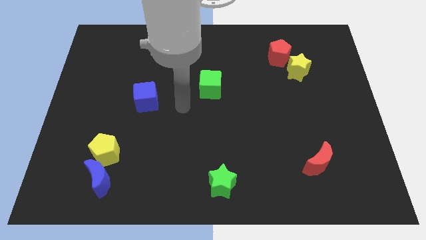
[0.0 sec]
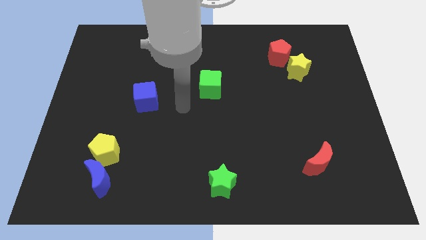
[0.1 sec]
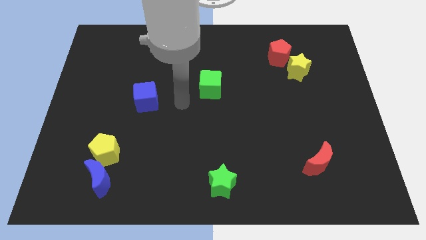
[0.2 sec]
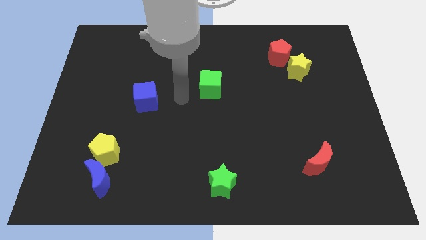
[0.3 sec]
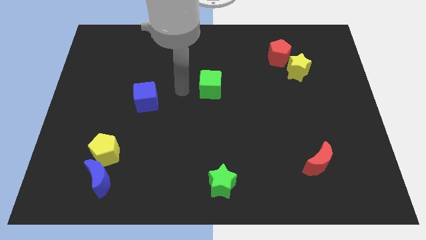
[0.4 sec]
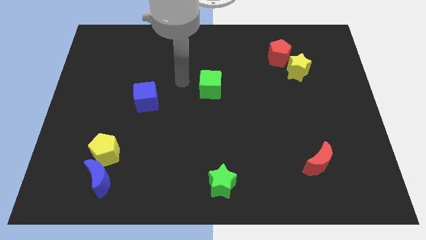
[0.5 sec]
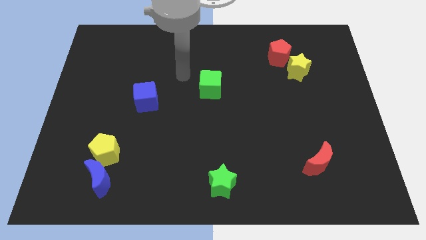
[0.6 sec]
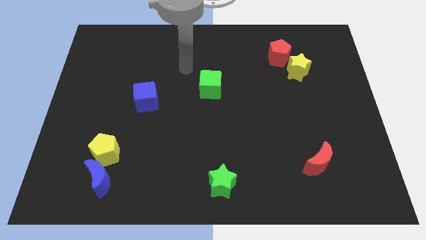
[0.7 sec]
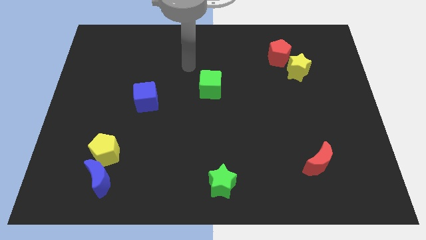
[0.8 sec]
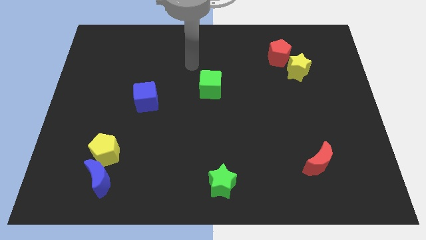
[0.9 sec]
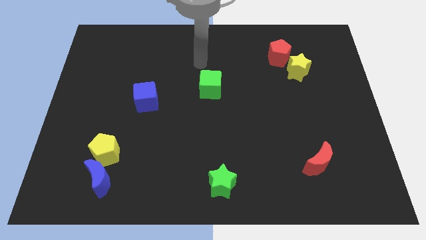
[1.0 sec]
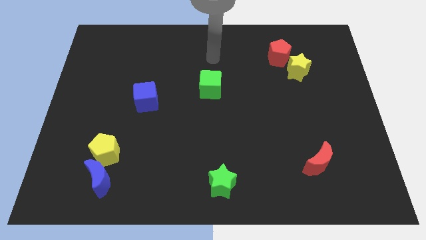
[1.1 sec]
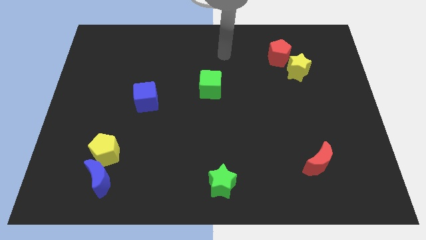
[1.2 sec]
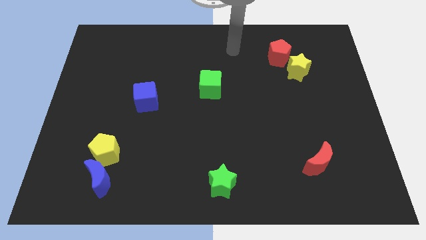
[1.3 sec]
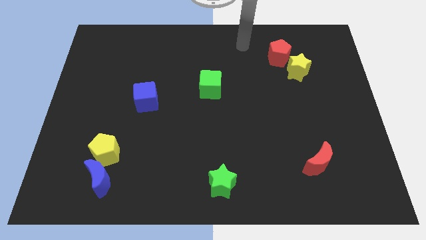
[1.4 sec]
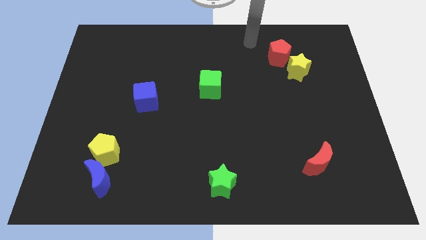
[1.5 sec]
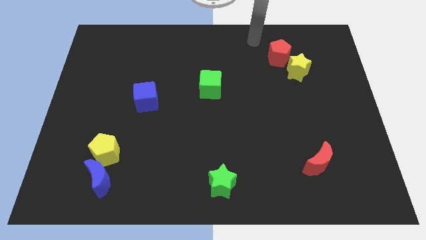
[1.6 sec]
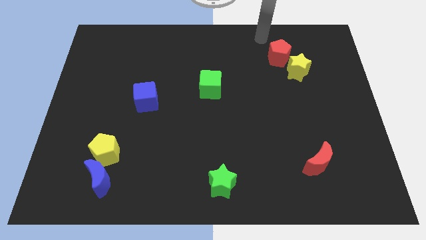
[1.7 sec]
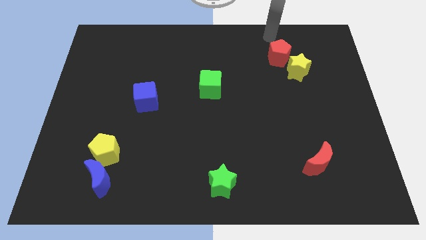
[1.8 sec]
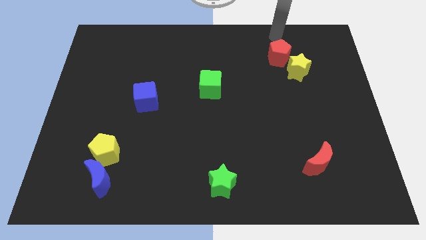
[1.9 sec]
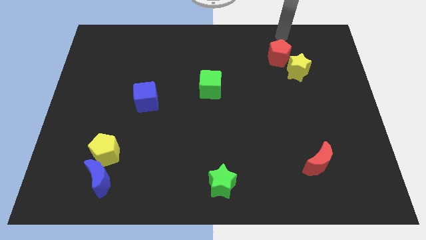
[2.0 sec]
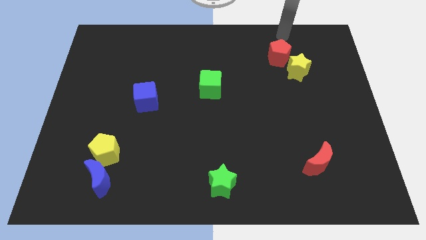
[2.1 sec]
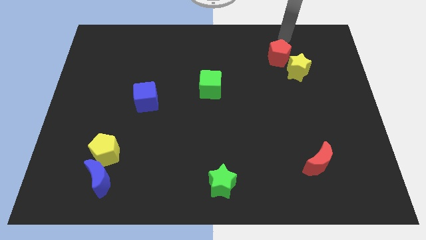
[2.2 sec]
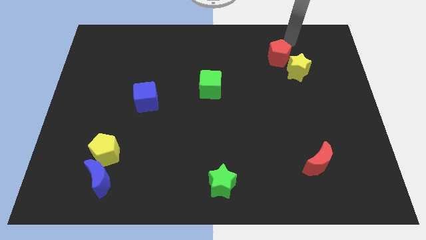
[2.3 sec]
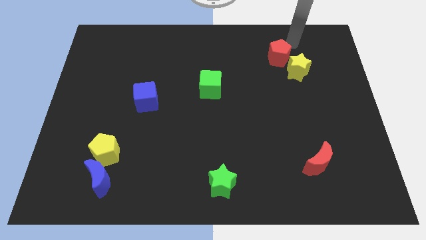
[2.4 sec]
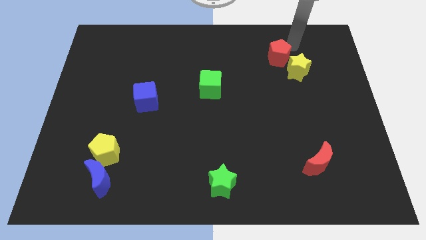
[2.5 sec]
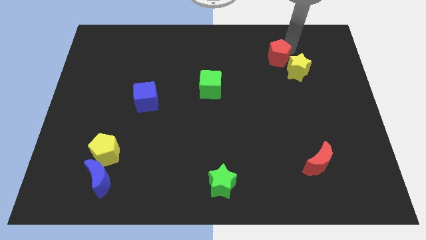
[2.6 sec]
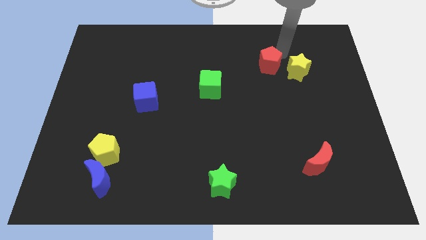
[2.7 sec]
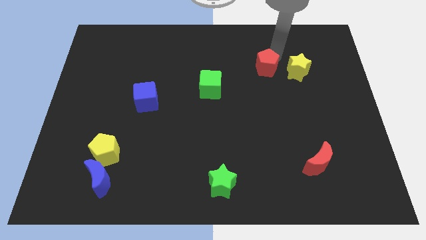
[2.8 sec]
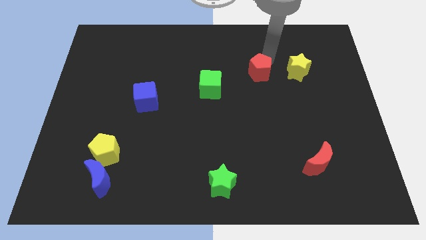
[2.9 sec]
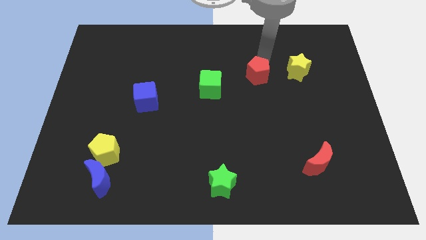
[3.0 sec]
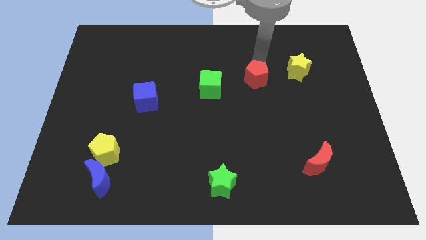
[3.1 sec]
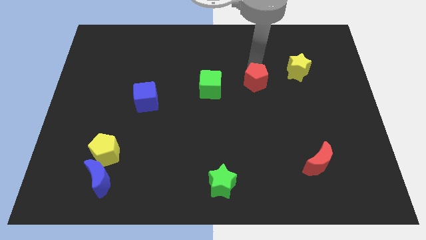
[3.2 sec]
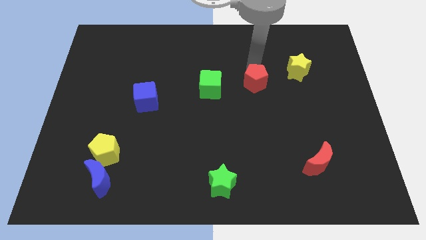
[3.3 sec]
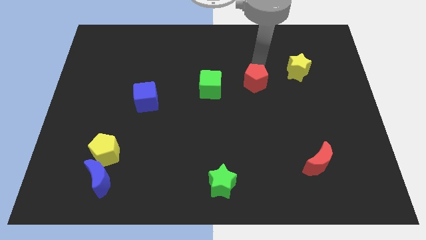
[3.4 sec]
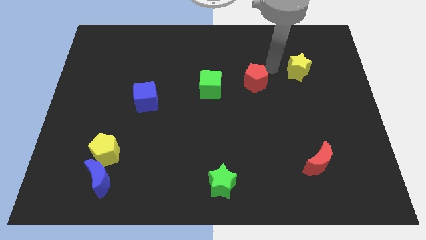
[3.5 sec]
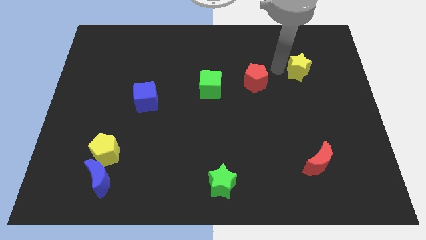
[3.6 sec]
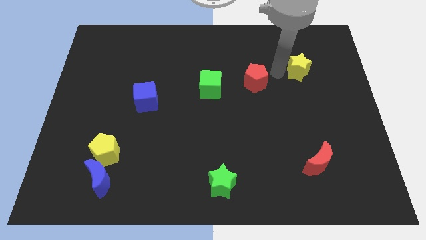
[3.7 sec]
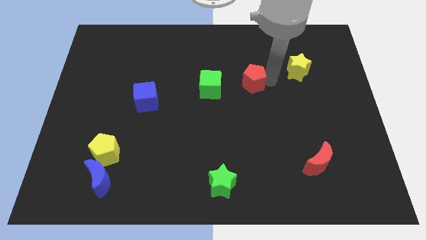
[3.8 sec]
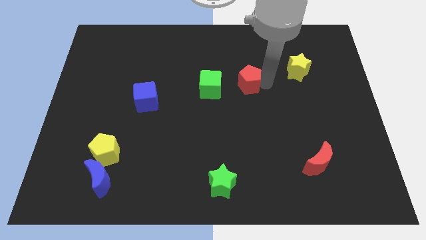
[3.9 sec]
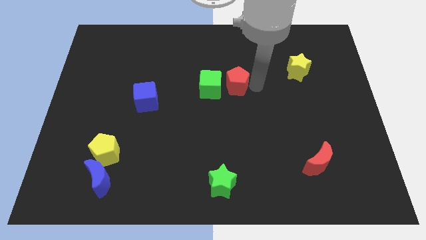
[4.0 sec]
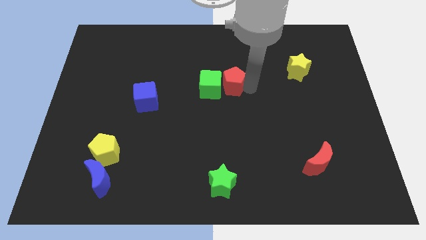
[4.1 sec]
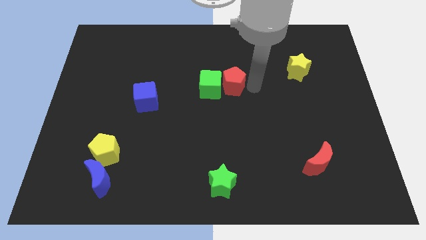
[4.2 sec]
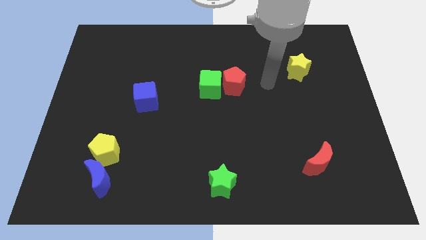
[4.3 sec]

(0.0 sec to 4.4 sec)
move the red pentagon to the right of the green cube

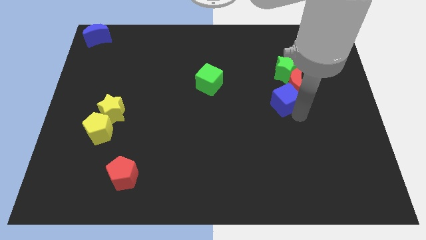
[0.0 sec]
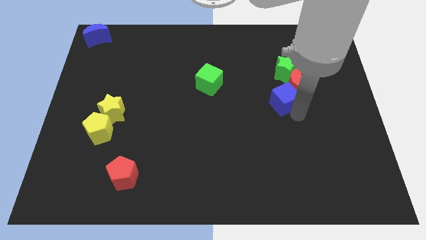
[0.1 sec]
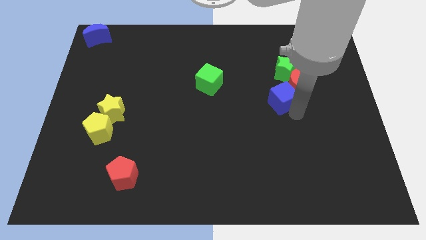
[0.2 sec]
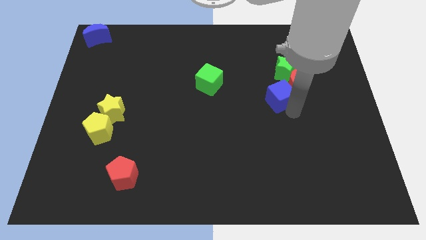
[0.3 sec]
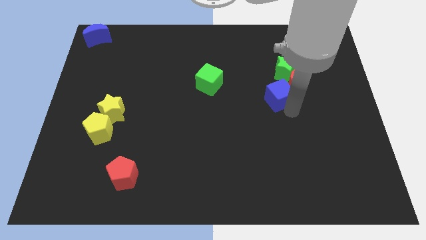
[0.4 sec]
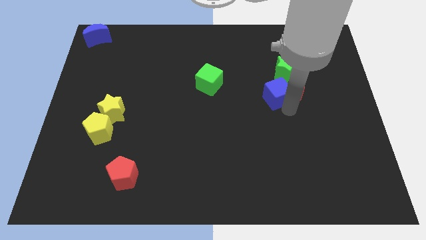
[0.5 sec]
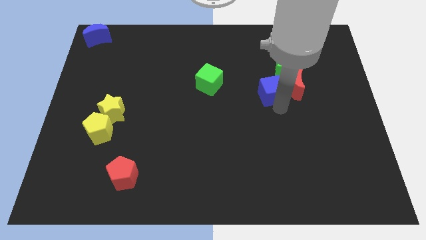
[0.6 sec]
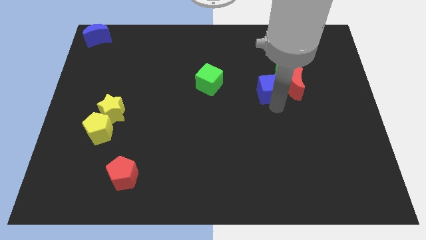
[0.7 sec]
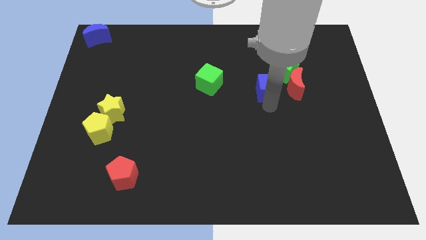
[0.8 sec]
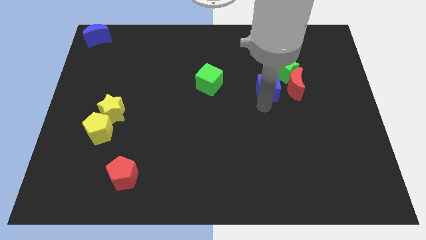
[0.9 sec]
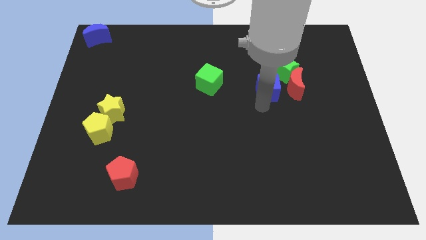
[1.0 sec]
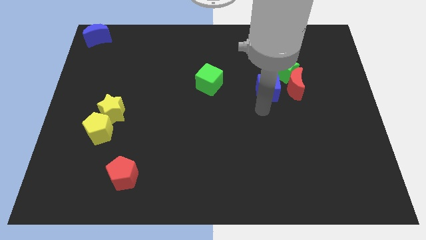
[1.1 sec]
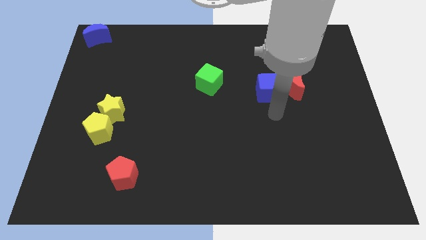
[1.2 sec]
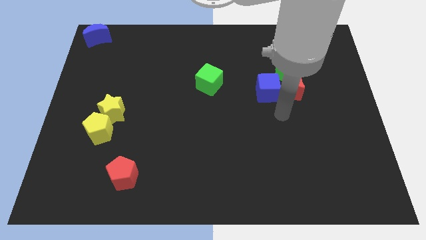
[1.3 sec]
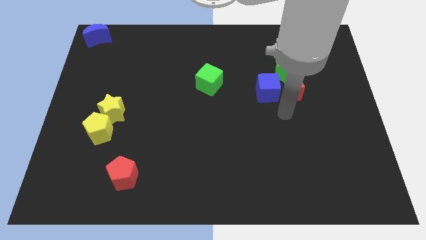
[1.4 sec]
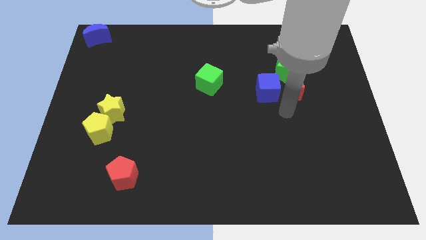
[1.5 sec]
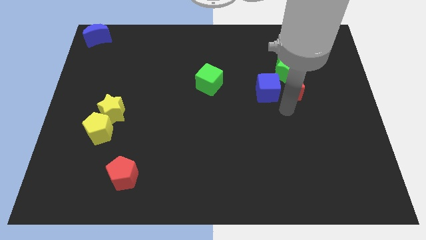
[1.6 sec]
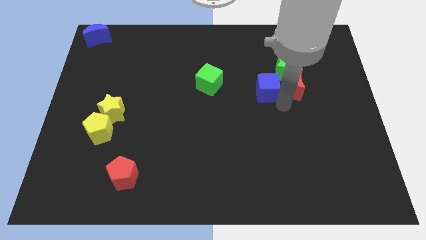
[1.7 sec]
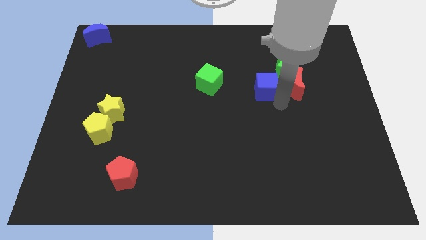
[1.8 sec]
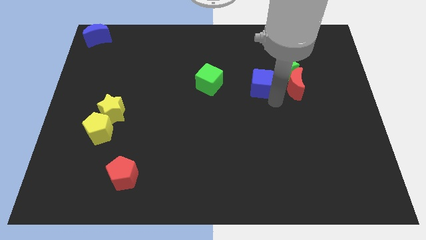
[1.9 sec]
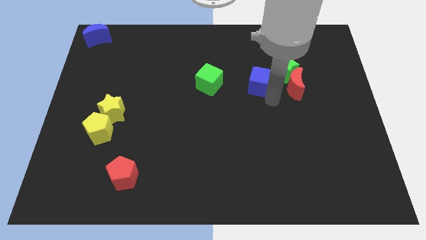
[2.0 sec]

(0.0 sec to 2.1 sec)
move the blue cube to the left side of the red moon

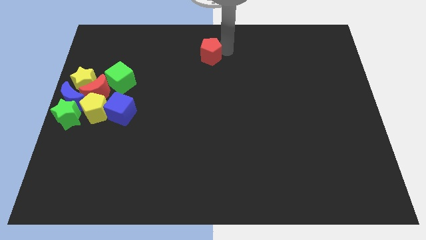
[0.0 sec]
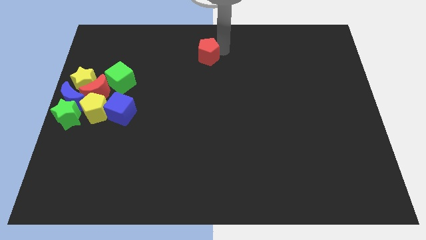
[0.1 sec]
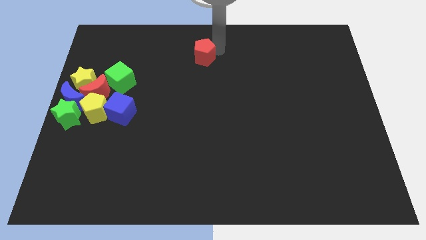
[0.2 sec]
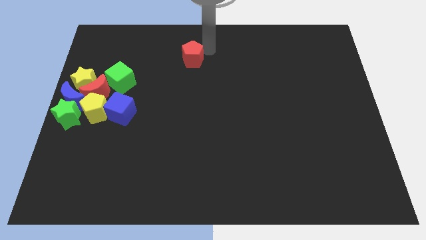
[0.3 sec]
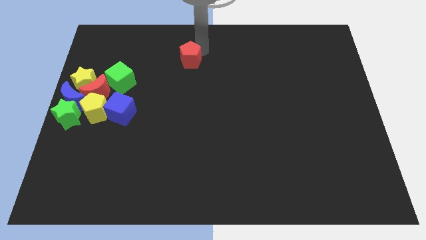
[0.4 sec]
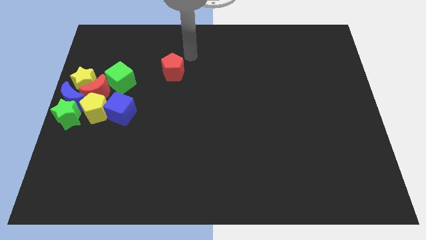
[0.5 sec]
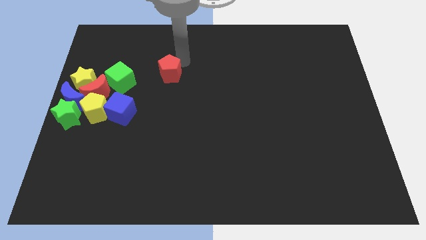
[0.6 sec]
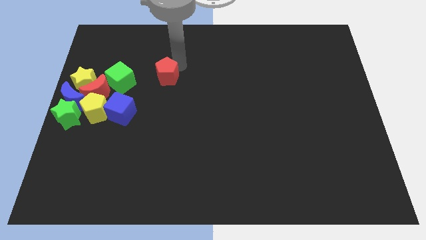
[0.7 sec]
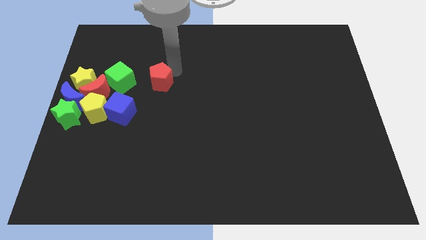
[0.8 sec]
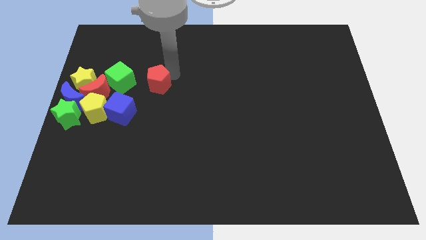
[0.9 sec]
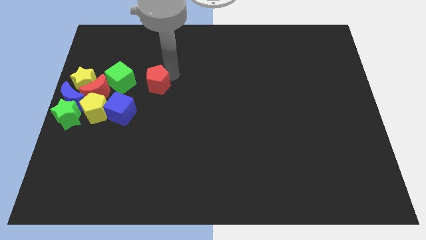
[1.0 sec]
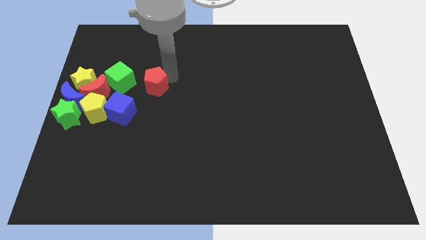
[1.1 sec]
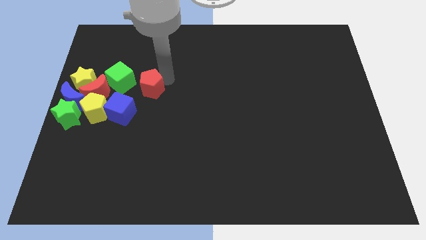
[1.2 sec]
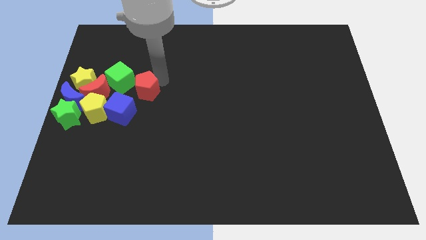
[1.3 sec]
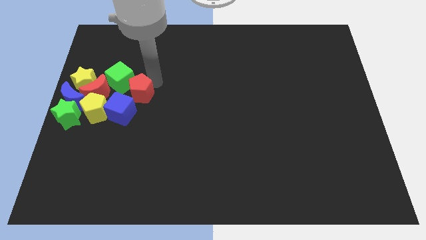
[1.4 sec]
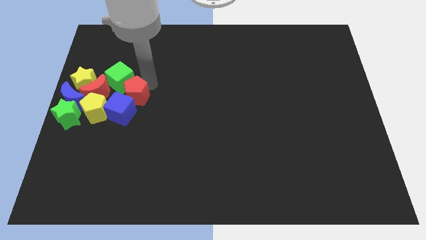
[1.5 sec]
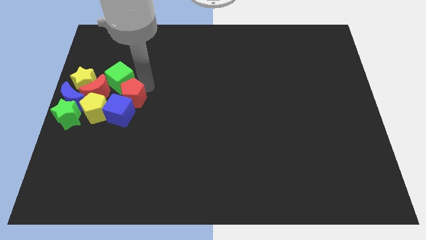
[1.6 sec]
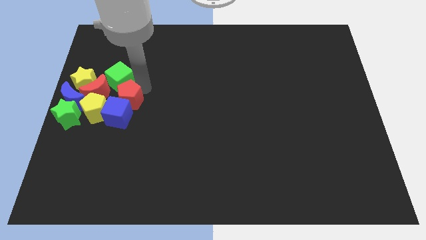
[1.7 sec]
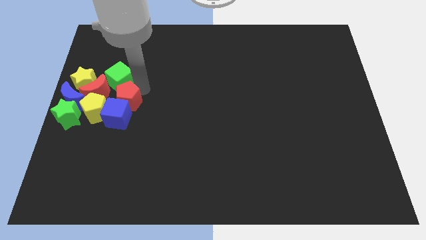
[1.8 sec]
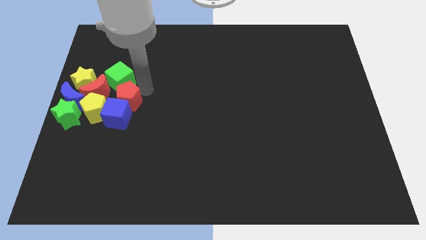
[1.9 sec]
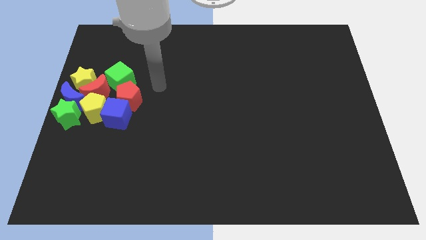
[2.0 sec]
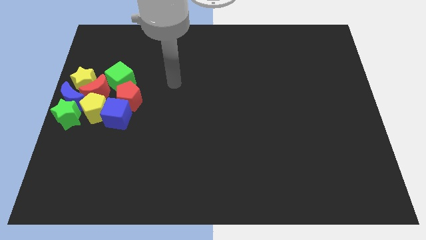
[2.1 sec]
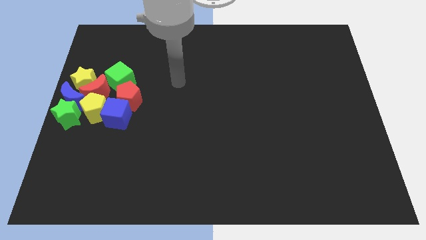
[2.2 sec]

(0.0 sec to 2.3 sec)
move the red pentagon into the blue cube

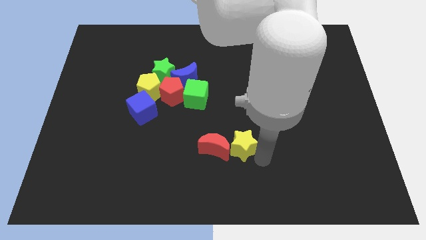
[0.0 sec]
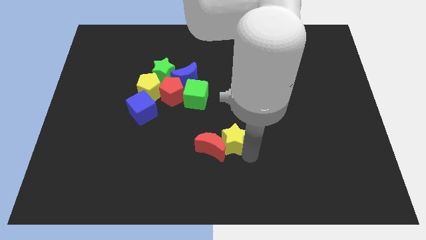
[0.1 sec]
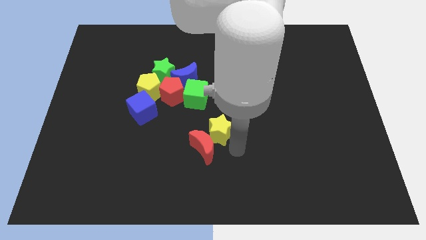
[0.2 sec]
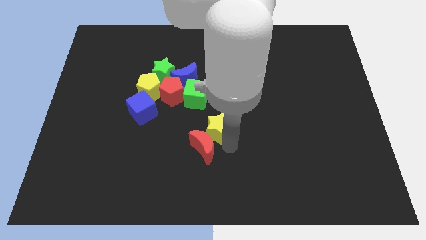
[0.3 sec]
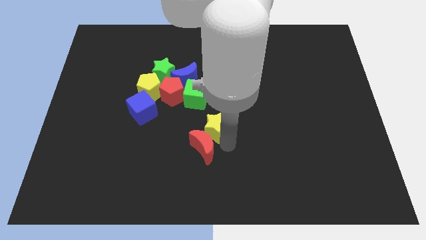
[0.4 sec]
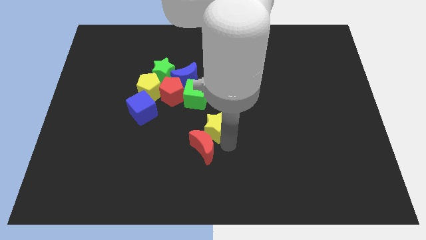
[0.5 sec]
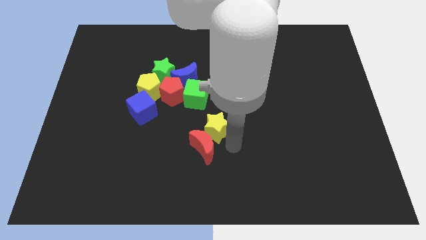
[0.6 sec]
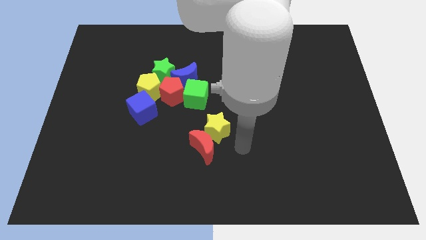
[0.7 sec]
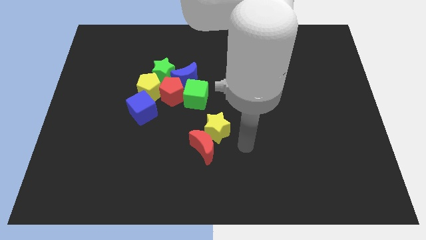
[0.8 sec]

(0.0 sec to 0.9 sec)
push the yellow star to the top of the red crescent
